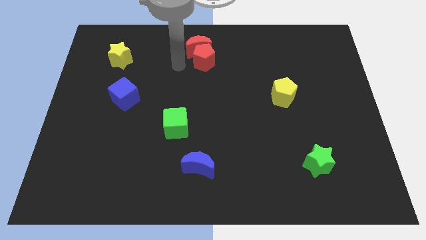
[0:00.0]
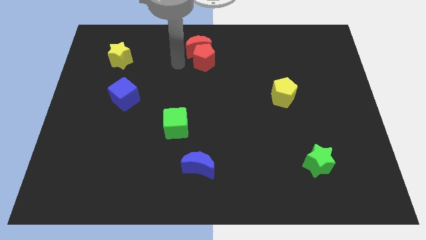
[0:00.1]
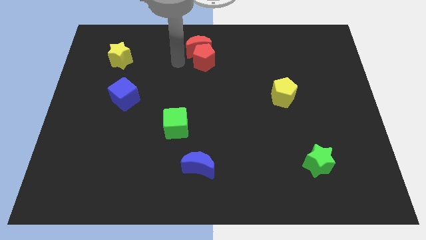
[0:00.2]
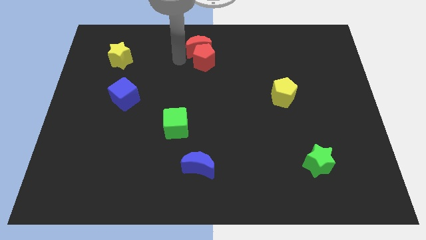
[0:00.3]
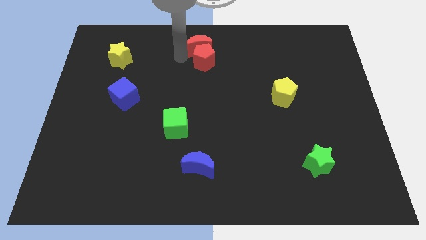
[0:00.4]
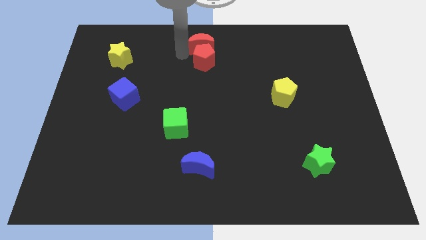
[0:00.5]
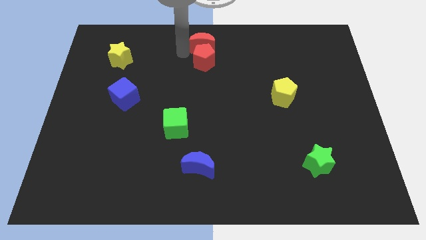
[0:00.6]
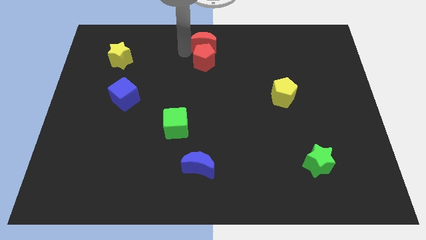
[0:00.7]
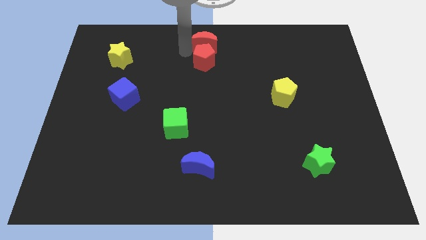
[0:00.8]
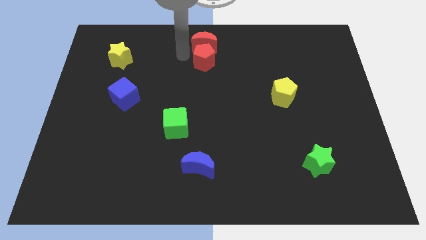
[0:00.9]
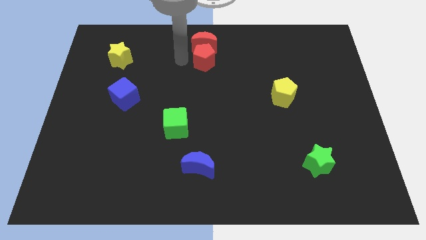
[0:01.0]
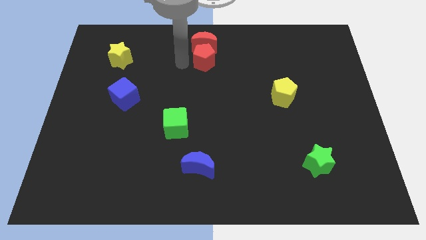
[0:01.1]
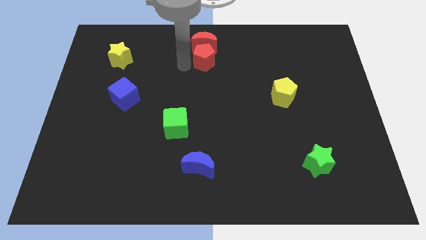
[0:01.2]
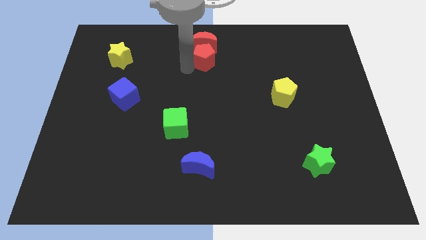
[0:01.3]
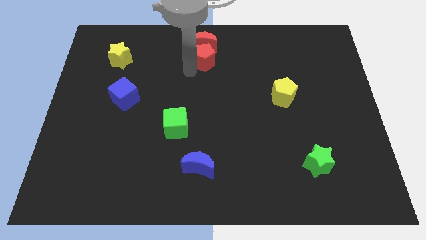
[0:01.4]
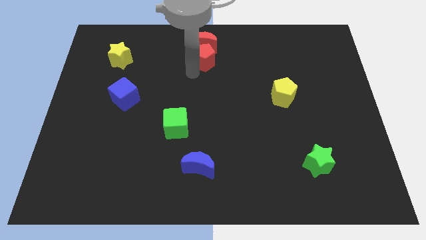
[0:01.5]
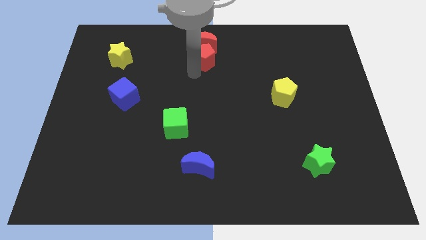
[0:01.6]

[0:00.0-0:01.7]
slightly move red crescent

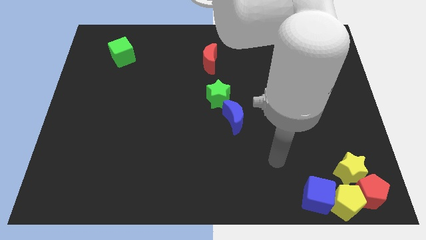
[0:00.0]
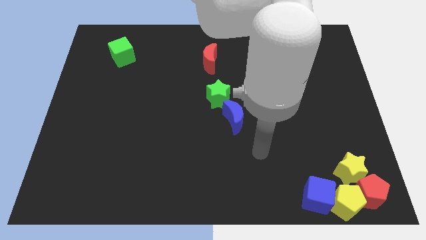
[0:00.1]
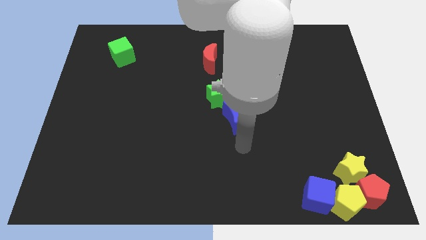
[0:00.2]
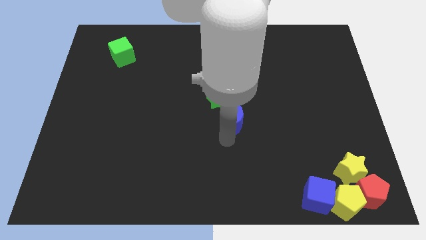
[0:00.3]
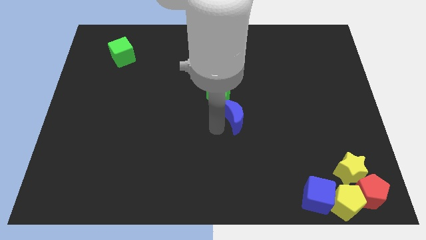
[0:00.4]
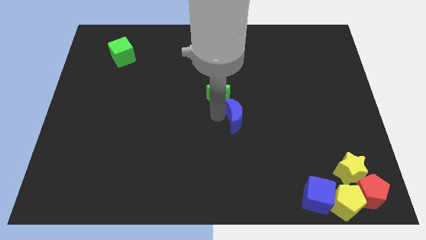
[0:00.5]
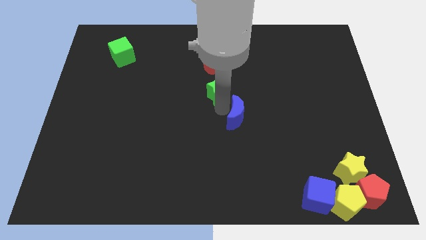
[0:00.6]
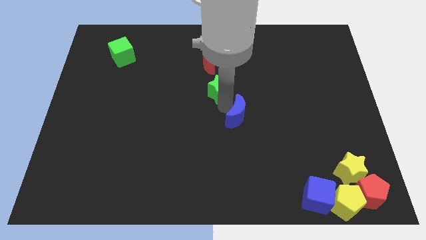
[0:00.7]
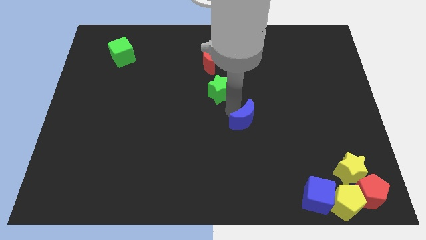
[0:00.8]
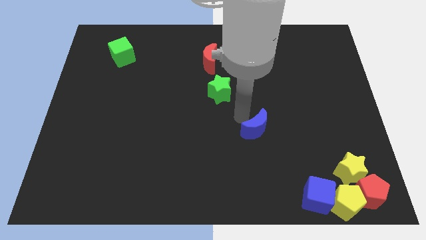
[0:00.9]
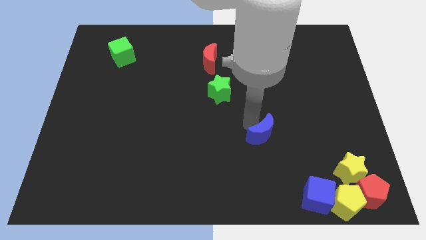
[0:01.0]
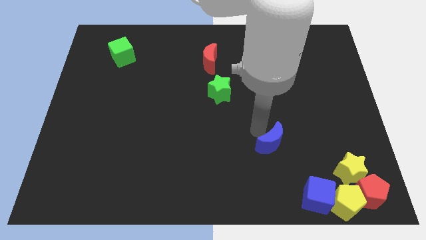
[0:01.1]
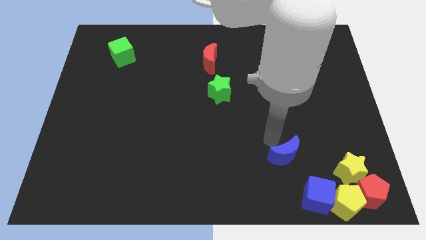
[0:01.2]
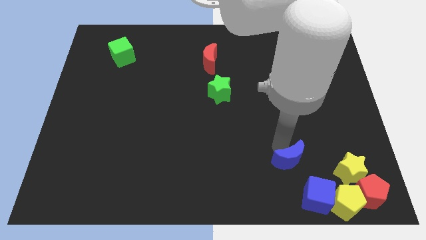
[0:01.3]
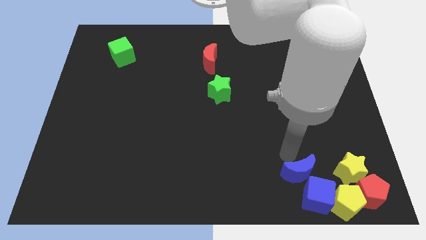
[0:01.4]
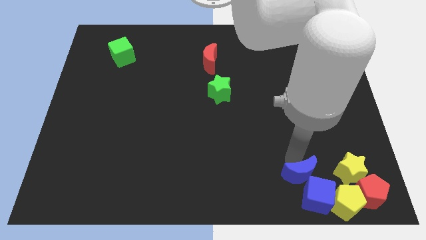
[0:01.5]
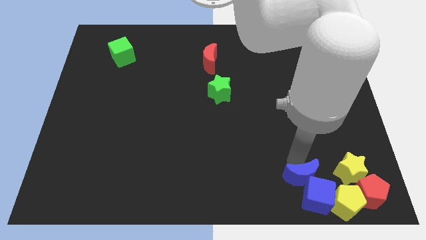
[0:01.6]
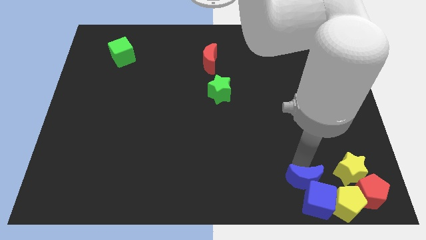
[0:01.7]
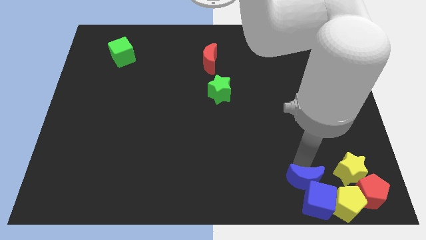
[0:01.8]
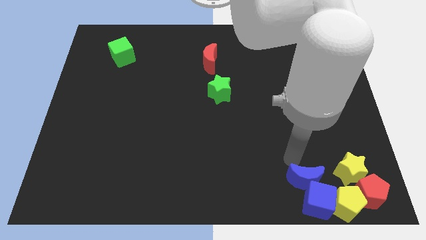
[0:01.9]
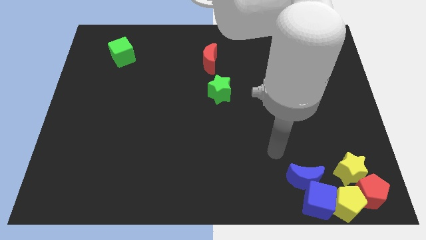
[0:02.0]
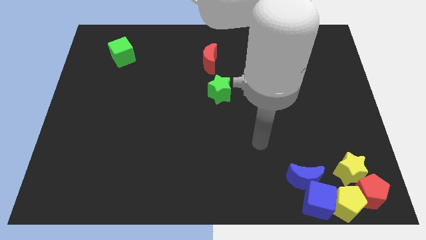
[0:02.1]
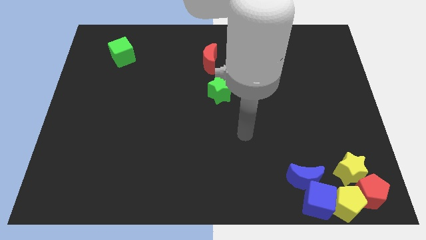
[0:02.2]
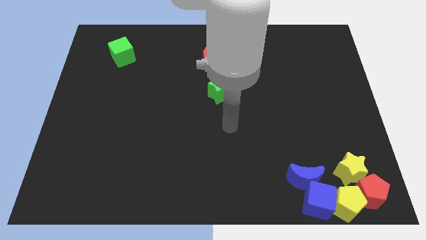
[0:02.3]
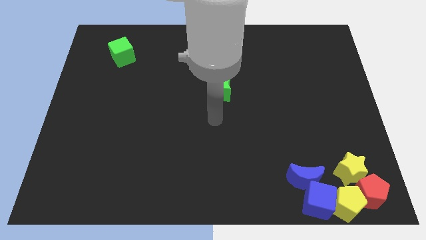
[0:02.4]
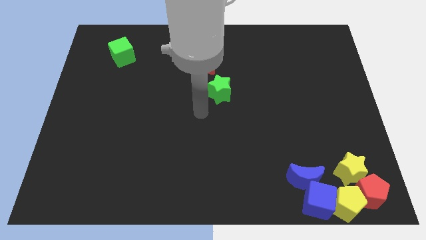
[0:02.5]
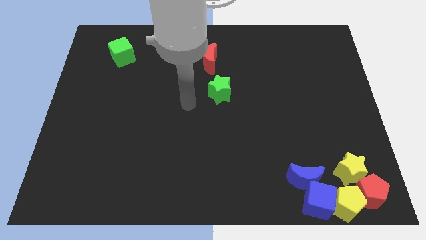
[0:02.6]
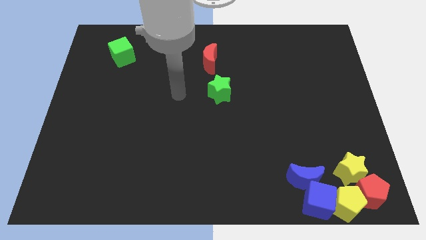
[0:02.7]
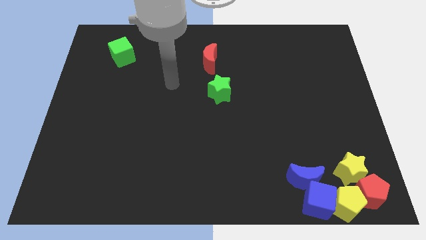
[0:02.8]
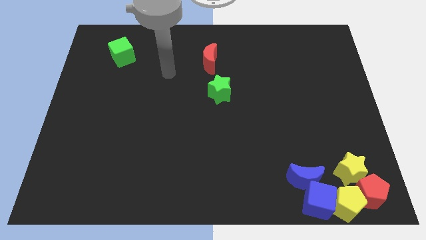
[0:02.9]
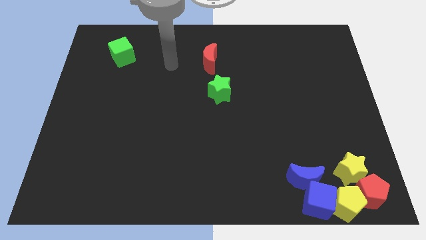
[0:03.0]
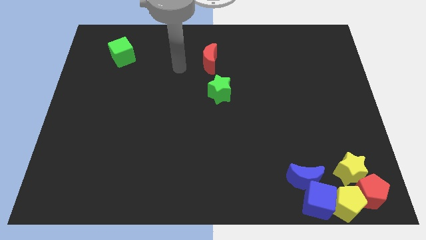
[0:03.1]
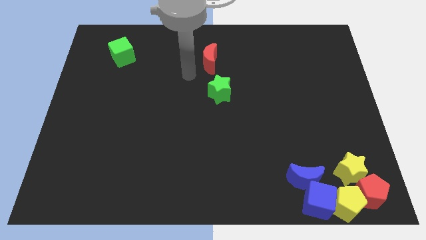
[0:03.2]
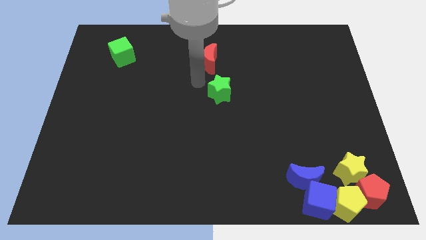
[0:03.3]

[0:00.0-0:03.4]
push the blue moon into the blue cube

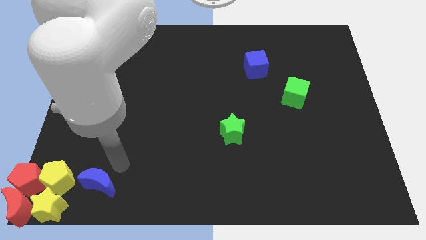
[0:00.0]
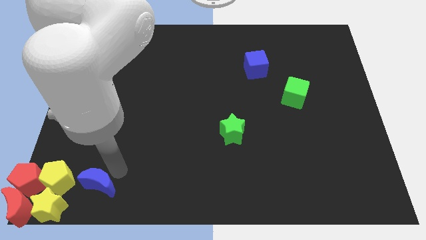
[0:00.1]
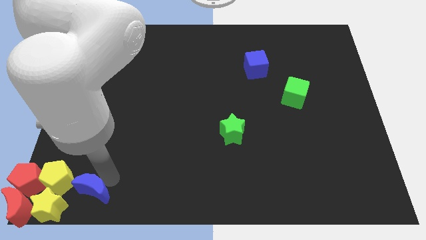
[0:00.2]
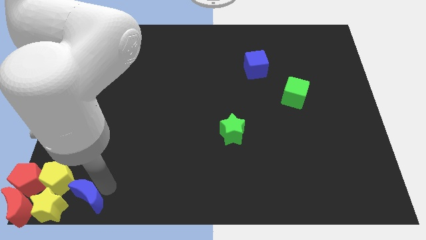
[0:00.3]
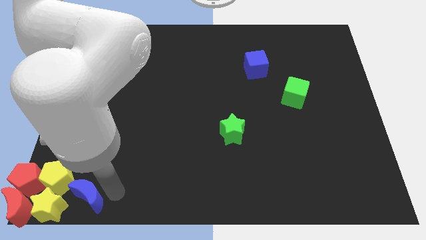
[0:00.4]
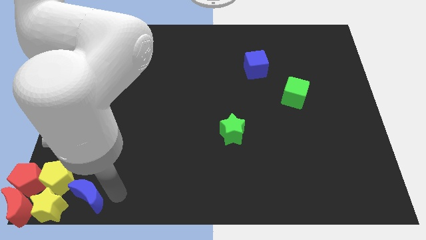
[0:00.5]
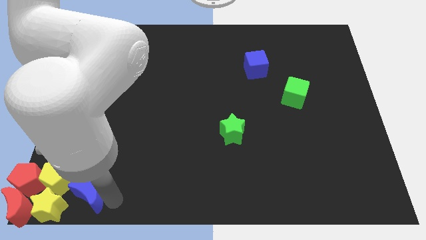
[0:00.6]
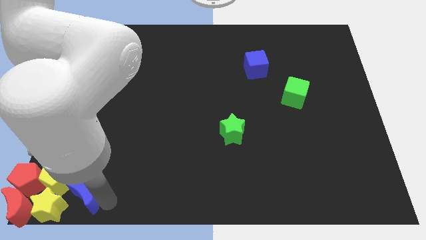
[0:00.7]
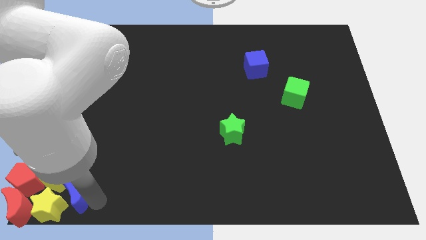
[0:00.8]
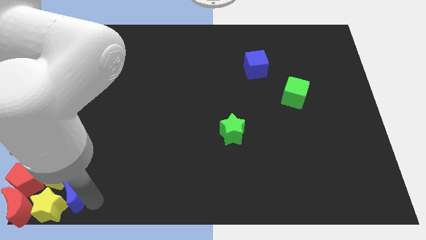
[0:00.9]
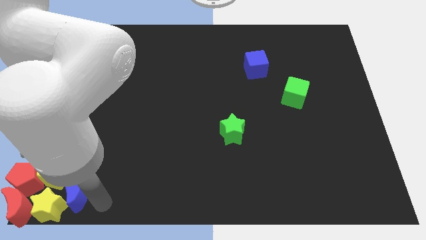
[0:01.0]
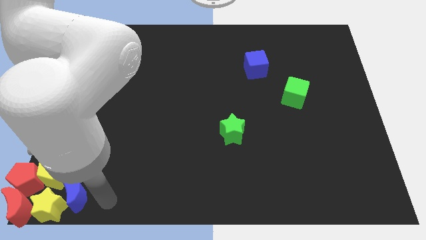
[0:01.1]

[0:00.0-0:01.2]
push the blue moon into the group of blocks

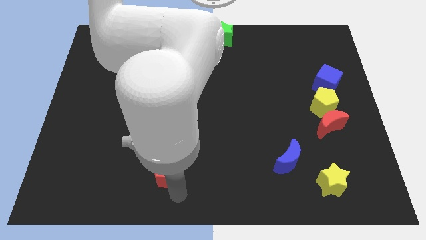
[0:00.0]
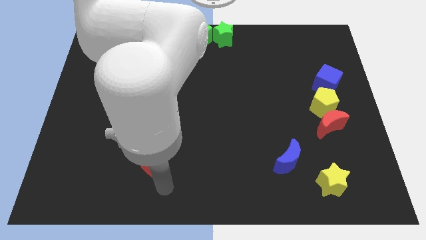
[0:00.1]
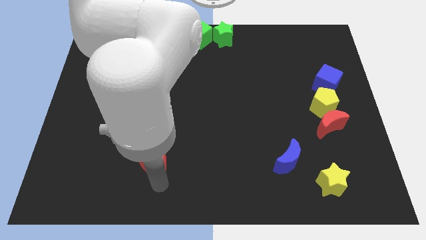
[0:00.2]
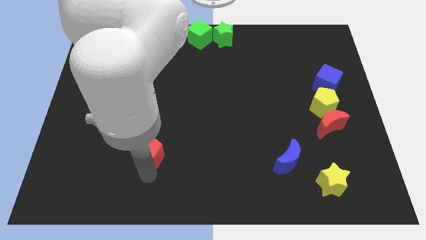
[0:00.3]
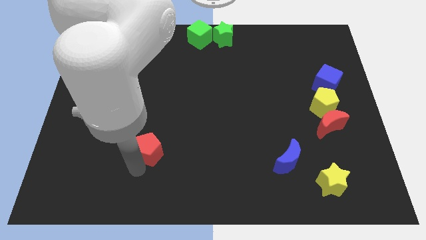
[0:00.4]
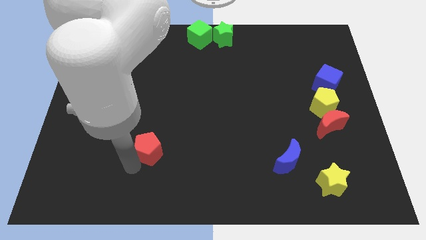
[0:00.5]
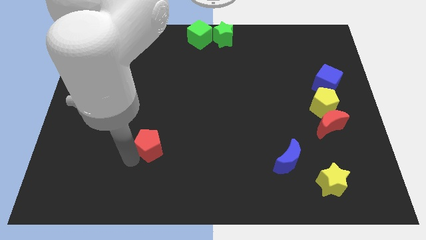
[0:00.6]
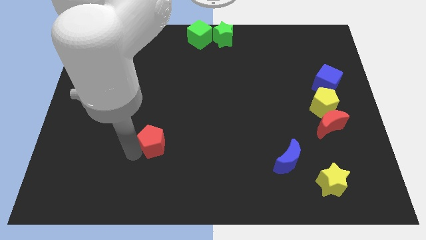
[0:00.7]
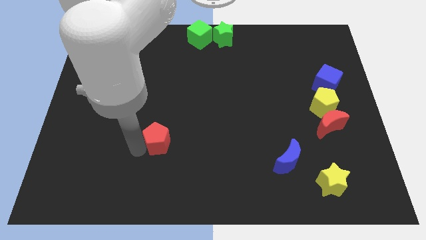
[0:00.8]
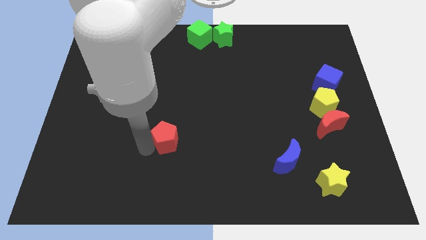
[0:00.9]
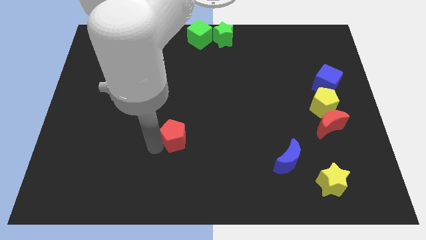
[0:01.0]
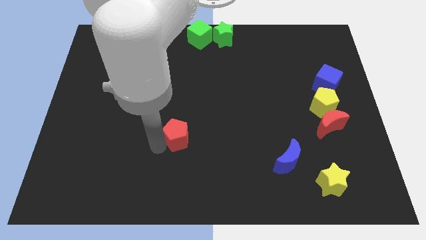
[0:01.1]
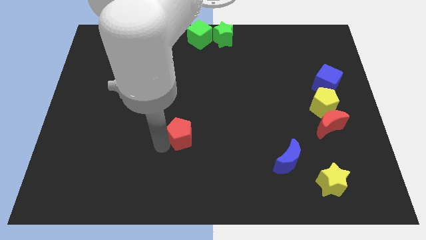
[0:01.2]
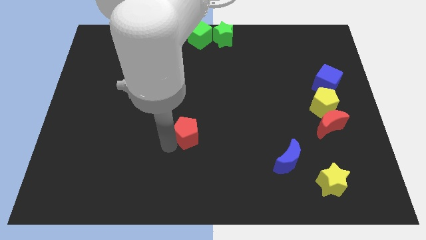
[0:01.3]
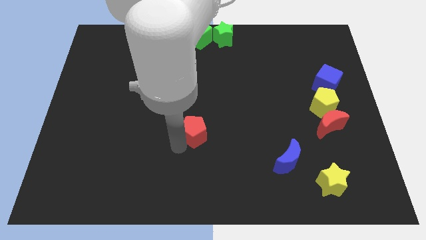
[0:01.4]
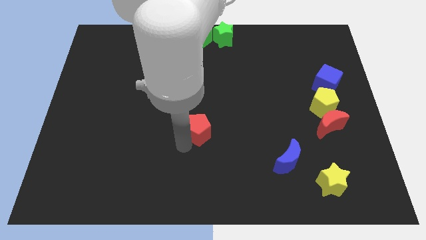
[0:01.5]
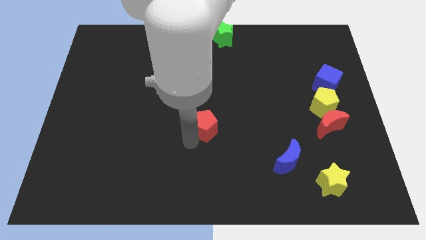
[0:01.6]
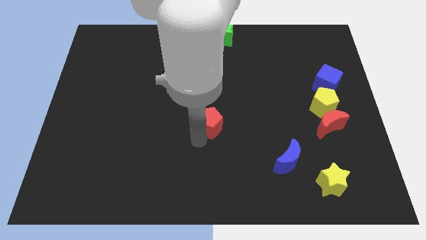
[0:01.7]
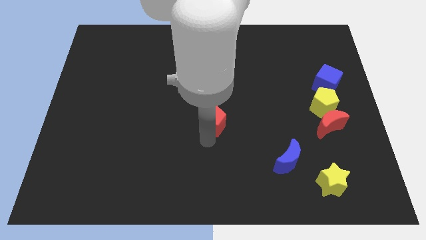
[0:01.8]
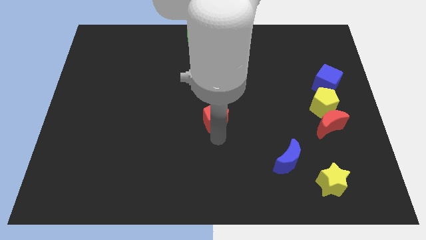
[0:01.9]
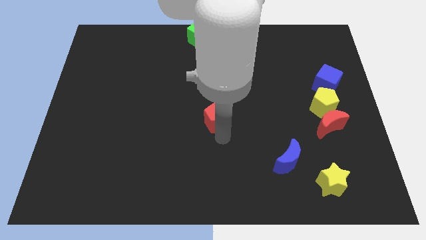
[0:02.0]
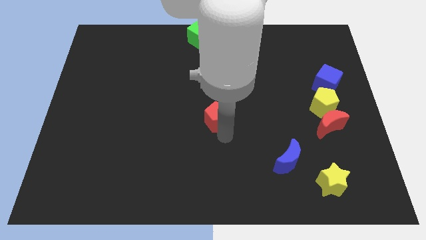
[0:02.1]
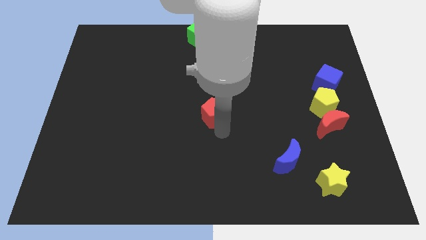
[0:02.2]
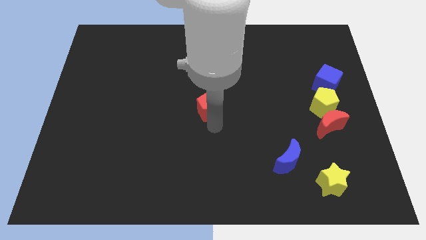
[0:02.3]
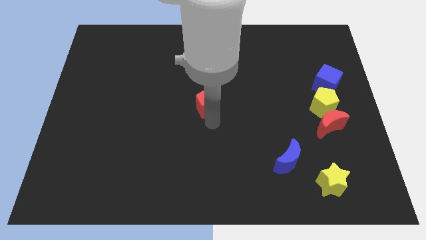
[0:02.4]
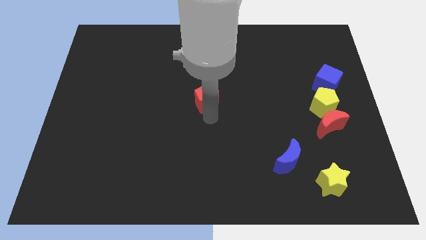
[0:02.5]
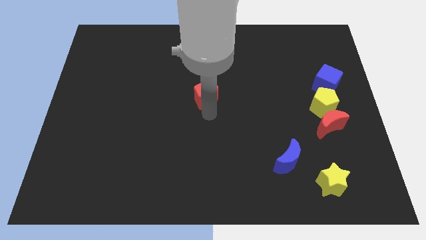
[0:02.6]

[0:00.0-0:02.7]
move the red pentagon to the top center of the board
